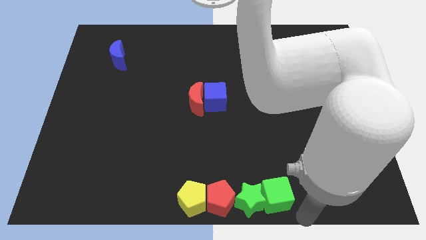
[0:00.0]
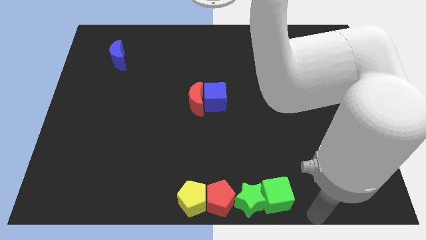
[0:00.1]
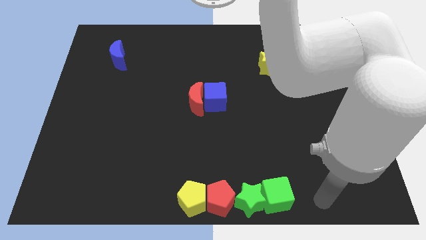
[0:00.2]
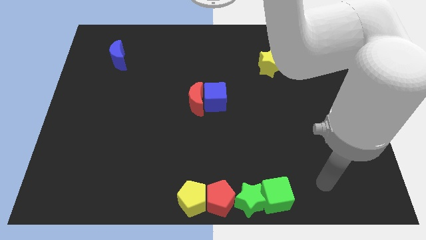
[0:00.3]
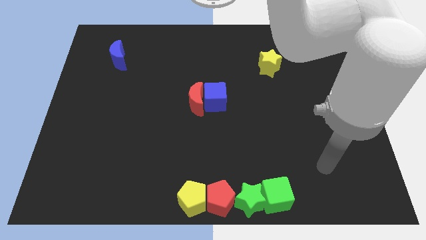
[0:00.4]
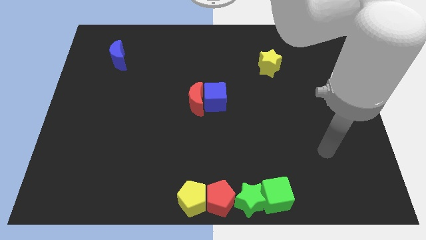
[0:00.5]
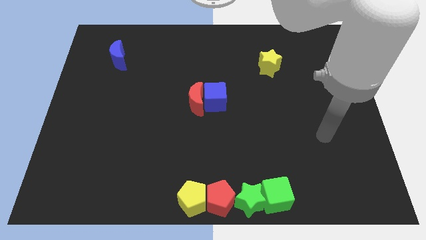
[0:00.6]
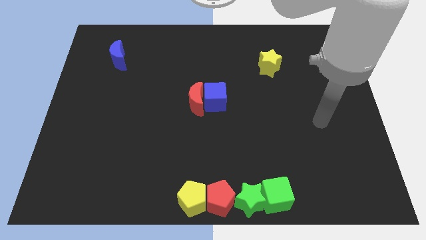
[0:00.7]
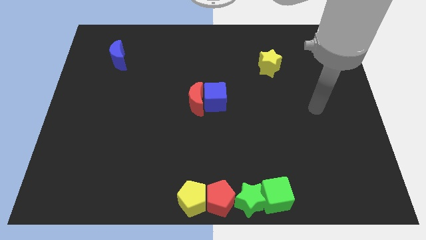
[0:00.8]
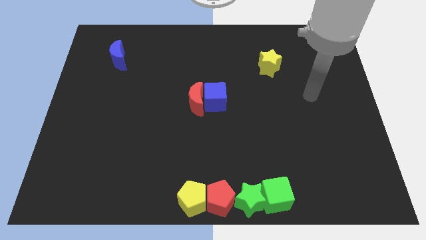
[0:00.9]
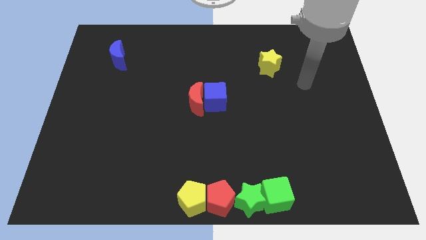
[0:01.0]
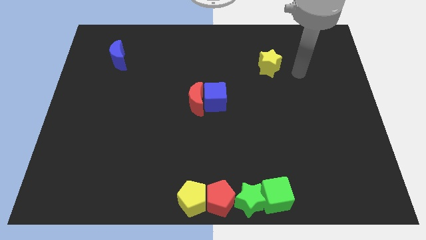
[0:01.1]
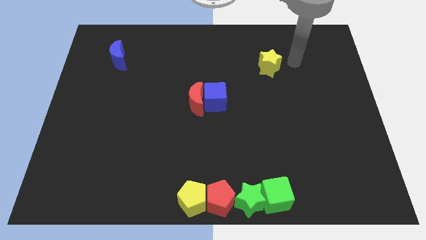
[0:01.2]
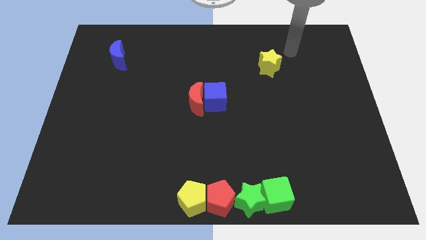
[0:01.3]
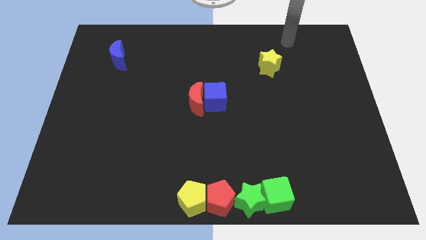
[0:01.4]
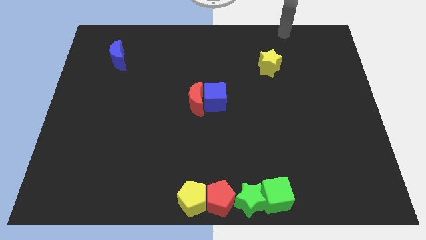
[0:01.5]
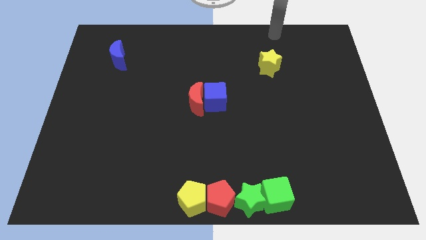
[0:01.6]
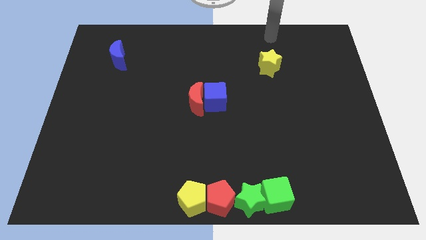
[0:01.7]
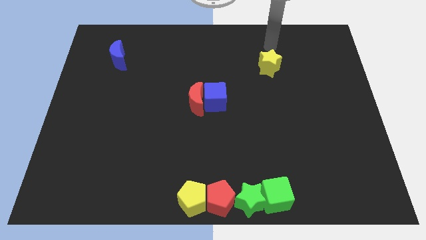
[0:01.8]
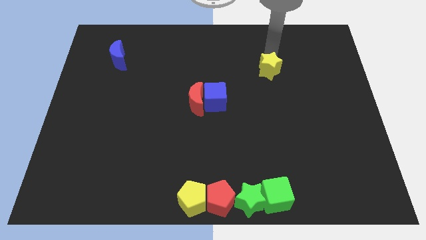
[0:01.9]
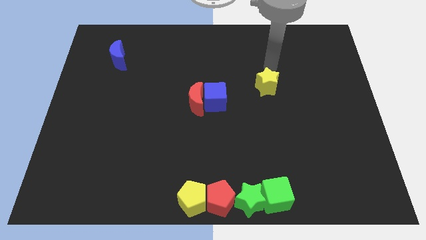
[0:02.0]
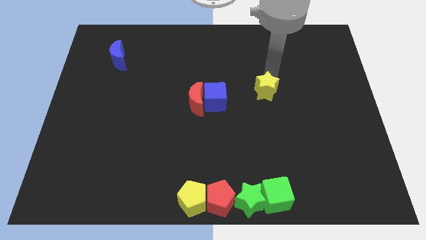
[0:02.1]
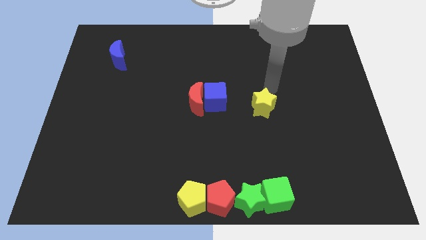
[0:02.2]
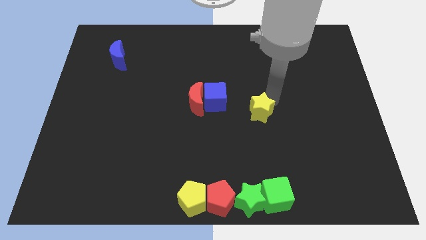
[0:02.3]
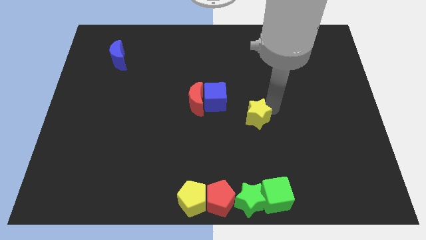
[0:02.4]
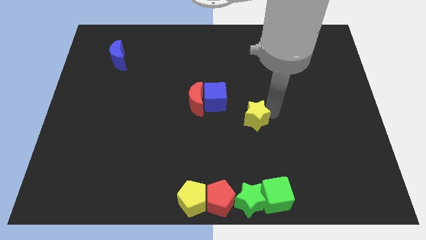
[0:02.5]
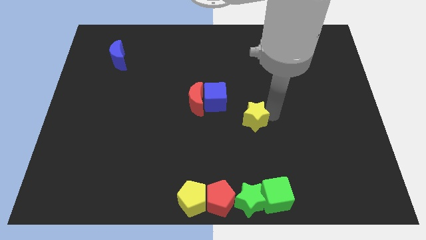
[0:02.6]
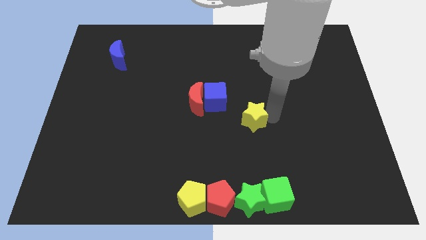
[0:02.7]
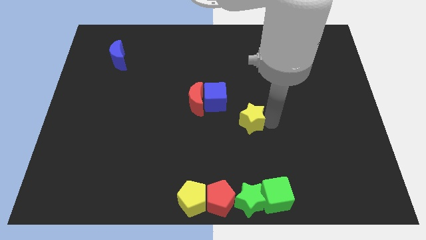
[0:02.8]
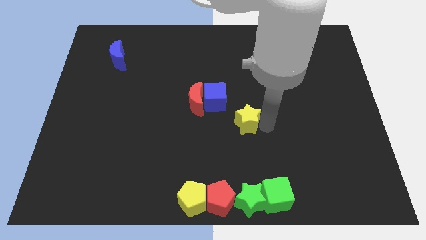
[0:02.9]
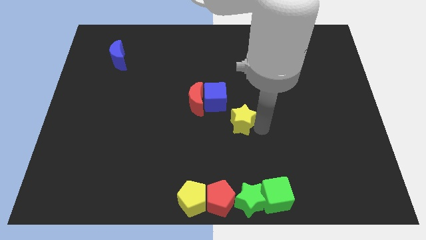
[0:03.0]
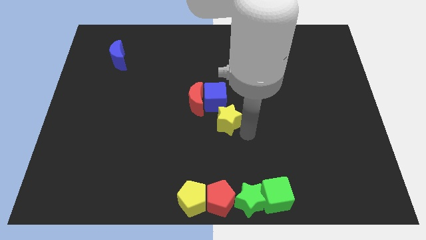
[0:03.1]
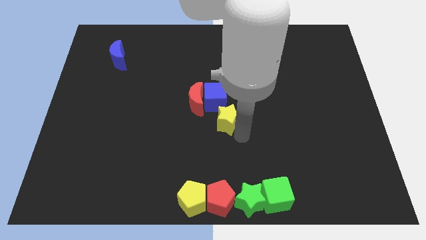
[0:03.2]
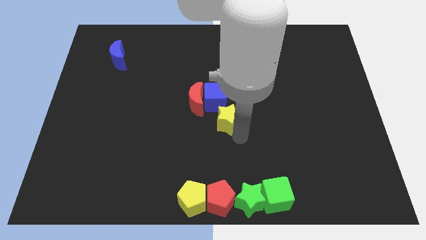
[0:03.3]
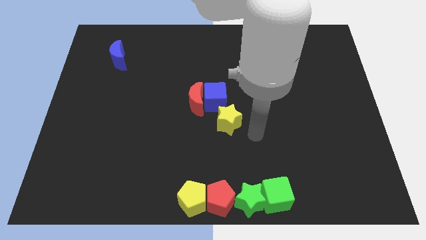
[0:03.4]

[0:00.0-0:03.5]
move the yellow star to the bottom of the blue cube

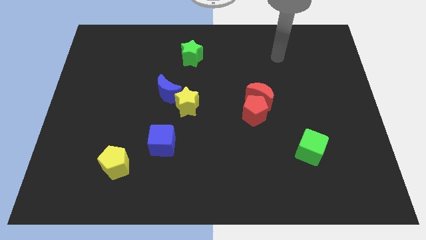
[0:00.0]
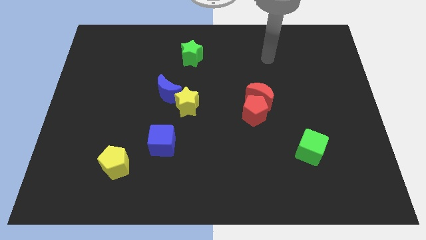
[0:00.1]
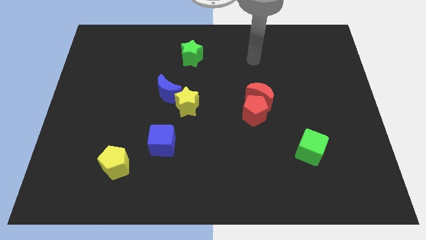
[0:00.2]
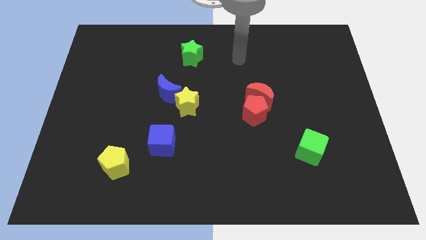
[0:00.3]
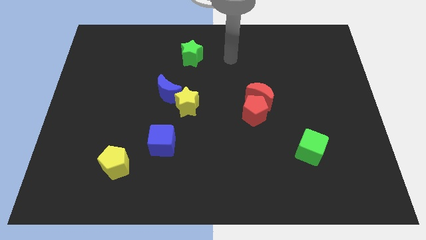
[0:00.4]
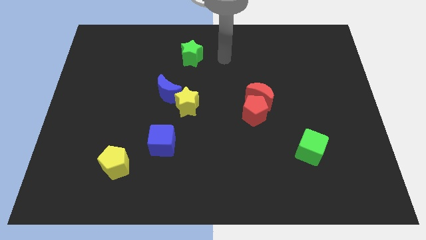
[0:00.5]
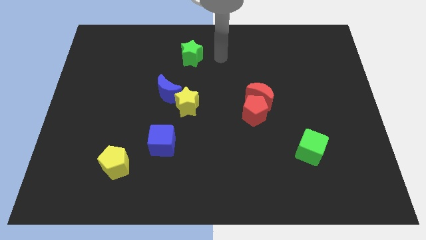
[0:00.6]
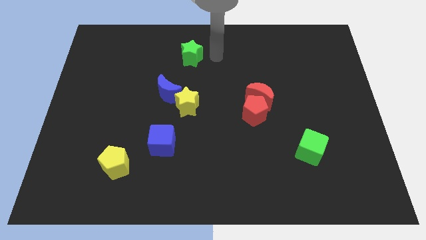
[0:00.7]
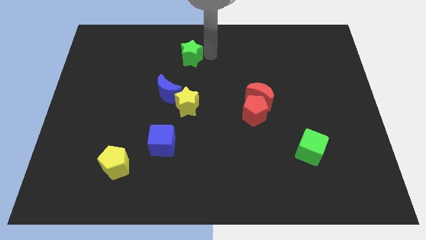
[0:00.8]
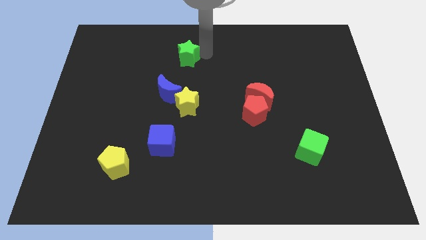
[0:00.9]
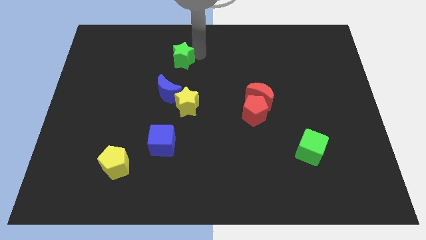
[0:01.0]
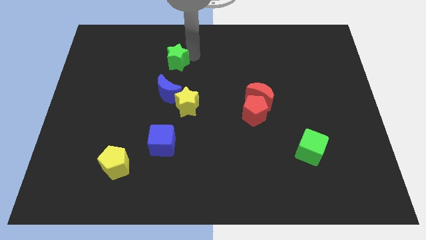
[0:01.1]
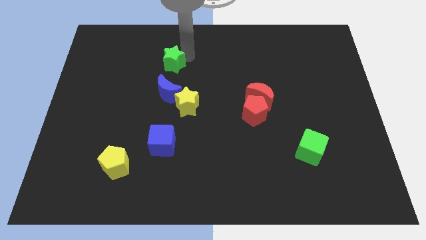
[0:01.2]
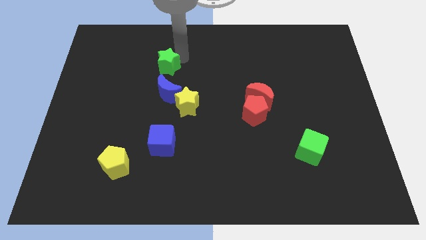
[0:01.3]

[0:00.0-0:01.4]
place the green star vertically above the blue moon

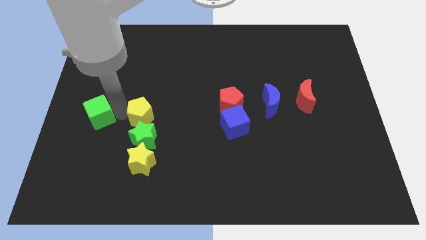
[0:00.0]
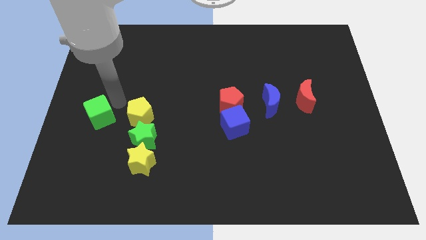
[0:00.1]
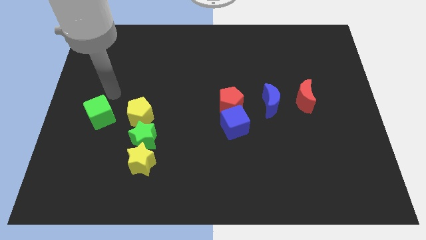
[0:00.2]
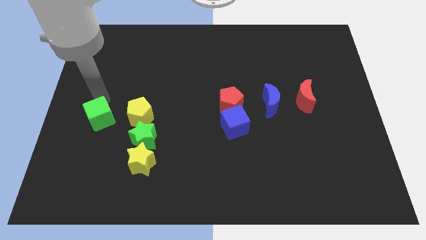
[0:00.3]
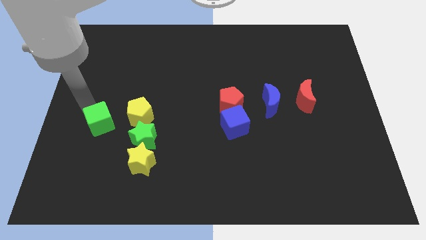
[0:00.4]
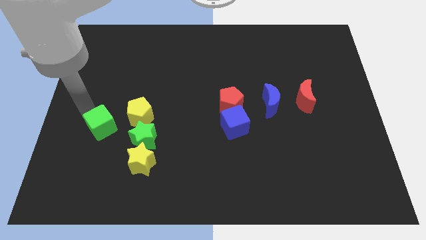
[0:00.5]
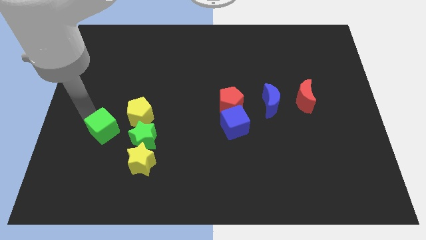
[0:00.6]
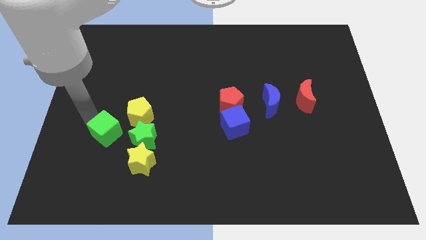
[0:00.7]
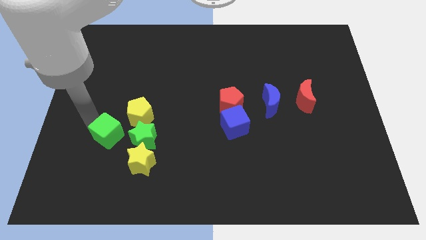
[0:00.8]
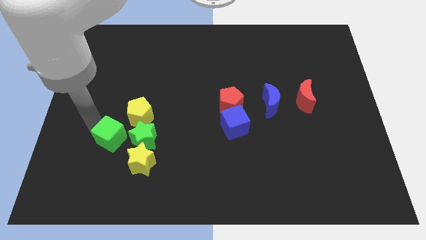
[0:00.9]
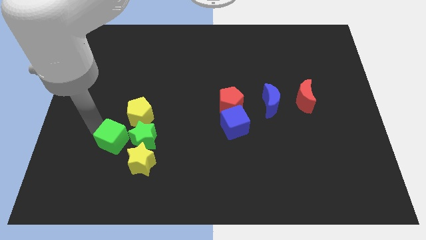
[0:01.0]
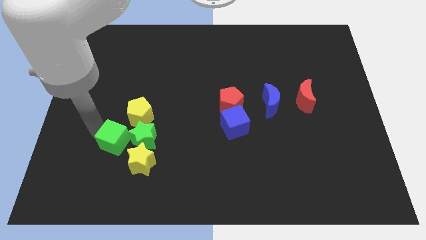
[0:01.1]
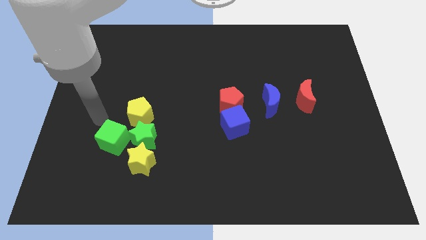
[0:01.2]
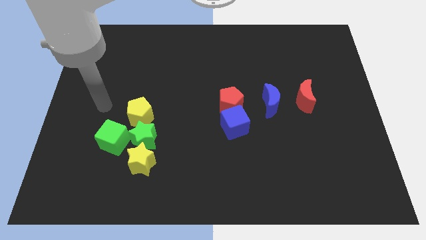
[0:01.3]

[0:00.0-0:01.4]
push the green cube diagonally bottom left to the yellow pentagon

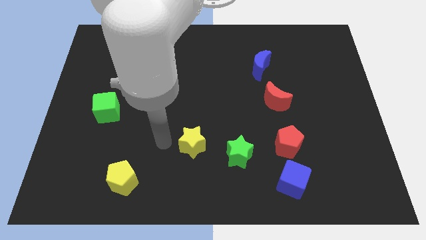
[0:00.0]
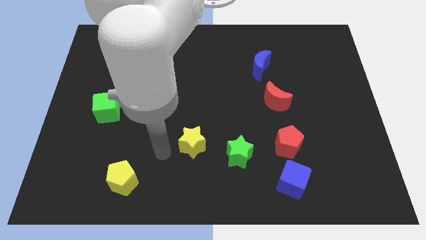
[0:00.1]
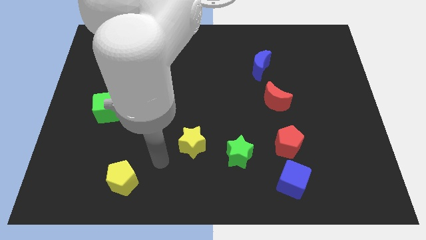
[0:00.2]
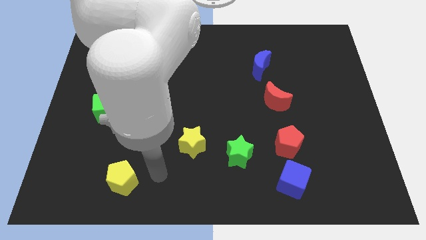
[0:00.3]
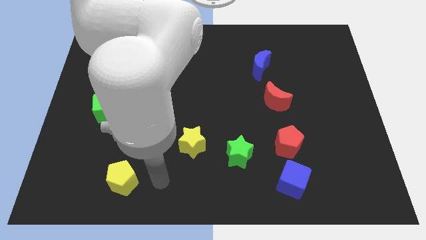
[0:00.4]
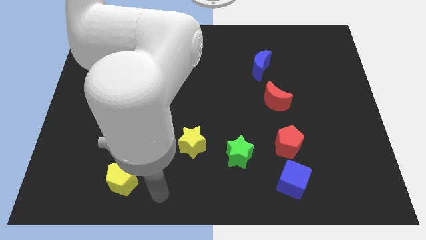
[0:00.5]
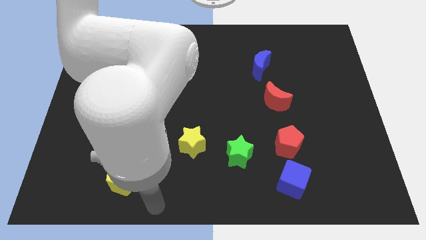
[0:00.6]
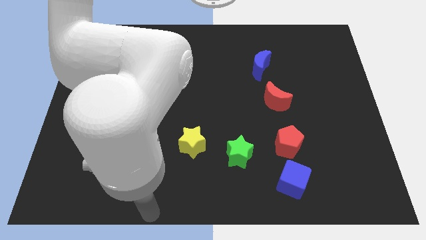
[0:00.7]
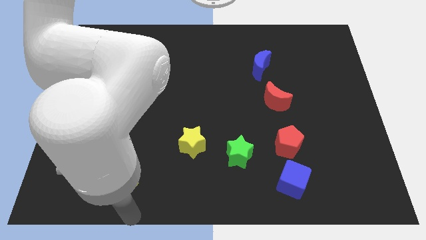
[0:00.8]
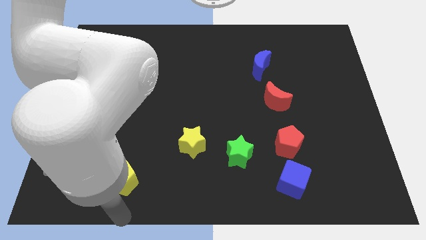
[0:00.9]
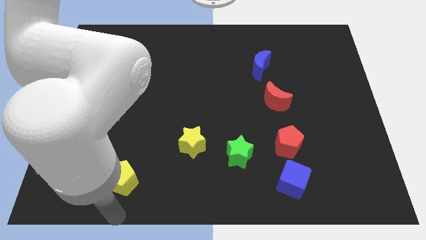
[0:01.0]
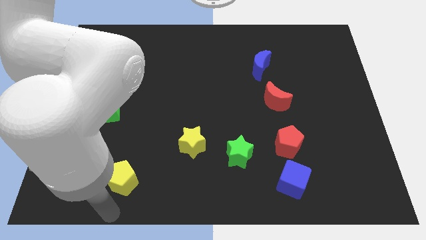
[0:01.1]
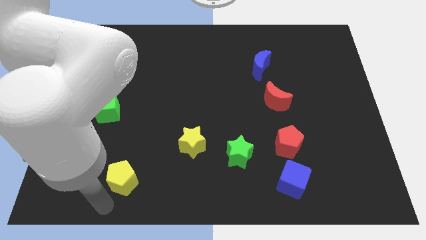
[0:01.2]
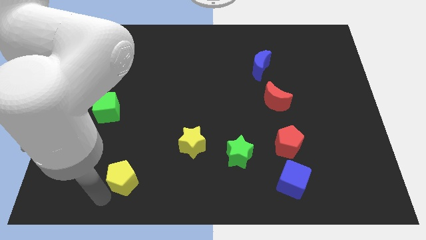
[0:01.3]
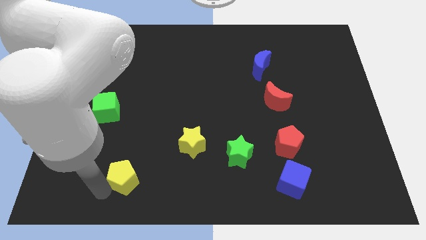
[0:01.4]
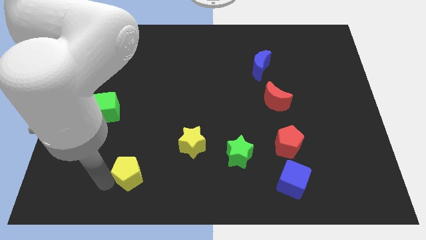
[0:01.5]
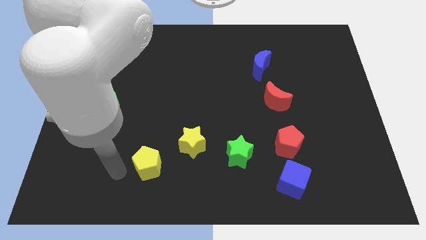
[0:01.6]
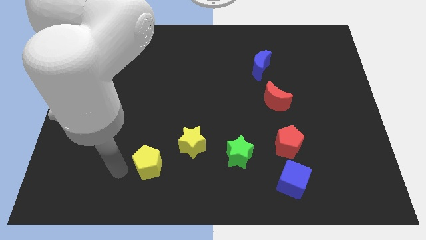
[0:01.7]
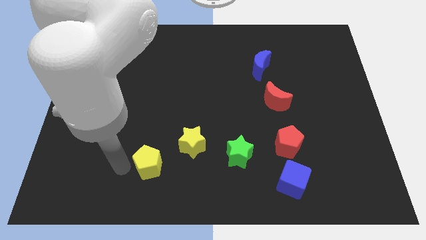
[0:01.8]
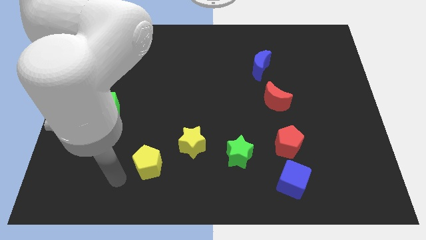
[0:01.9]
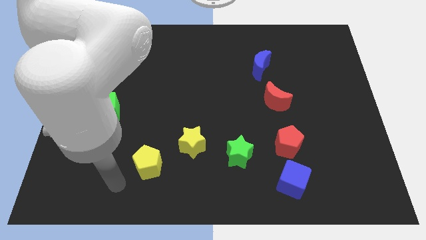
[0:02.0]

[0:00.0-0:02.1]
push the yellow pentagon towards the left side of the yellow star

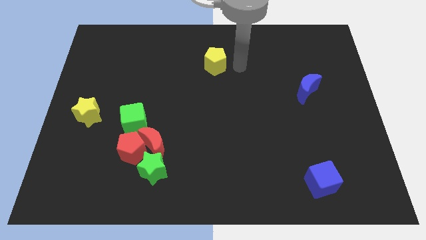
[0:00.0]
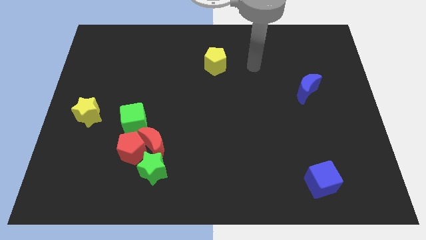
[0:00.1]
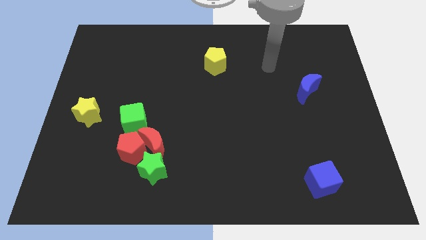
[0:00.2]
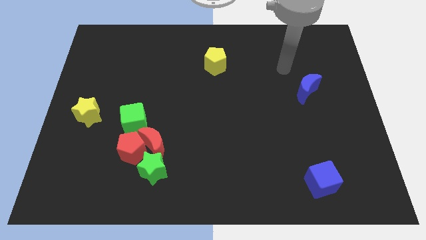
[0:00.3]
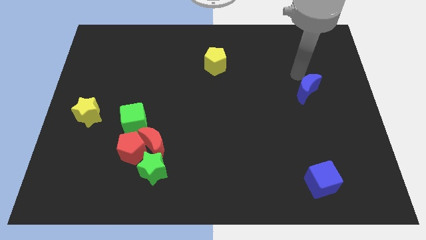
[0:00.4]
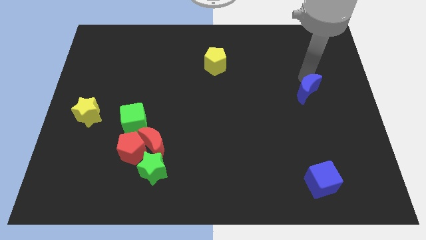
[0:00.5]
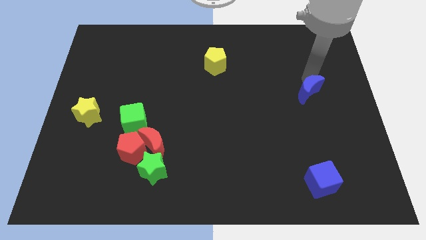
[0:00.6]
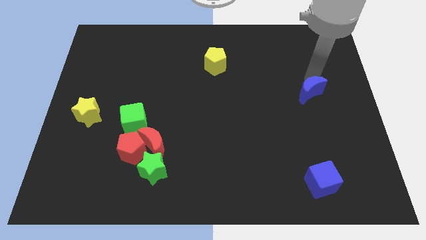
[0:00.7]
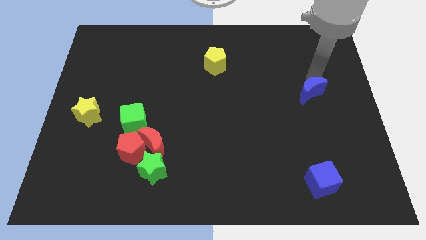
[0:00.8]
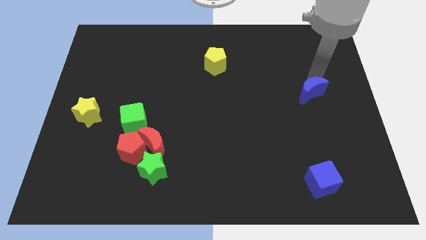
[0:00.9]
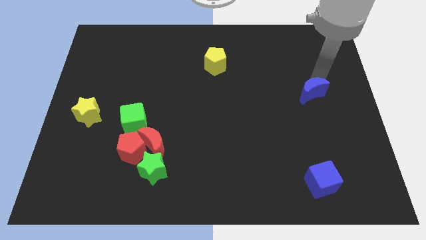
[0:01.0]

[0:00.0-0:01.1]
move your arm towards the blue crescent
